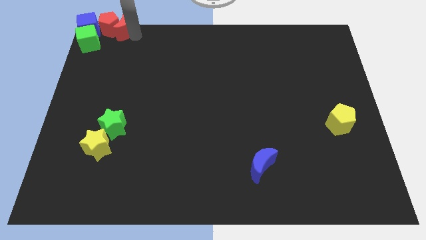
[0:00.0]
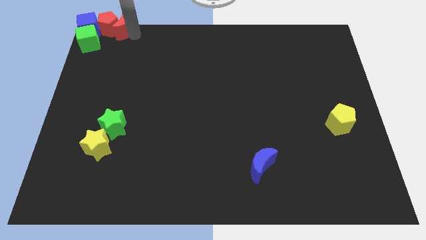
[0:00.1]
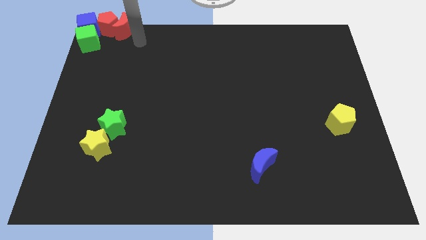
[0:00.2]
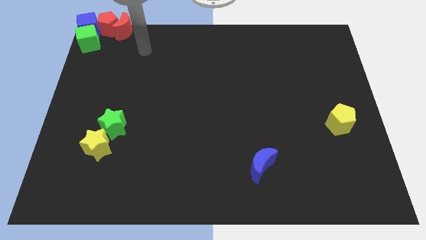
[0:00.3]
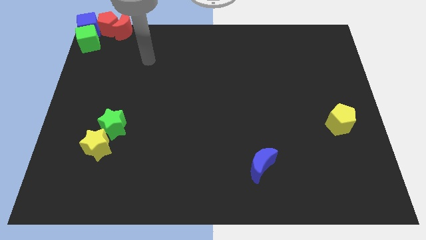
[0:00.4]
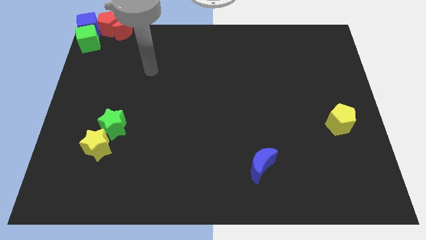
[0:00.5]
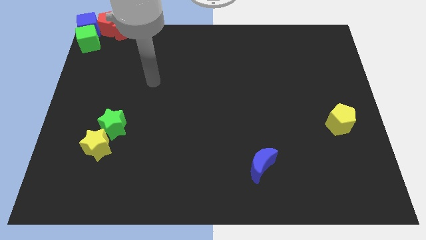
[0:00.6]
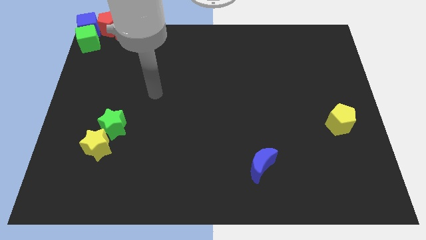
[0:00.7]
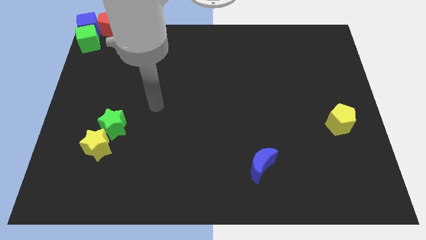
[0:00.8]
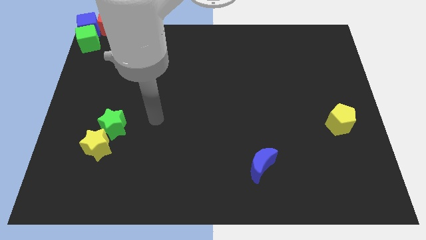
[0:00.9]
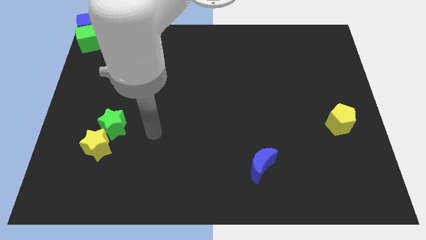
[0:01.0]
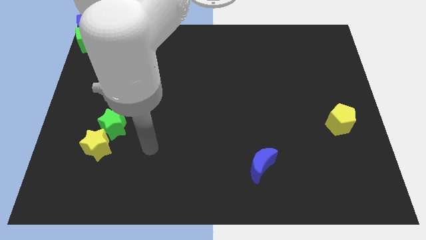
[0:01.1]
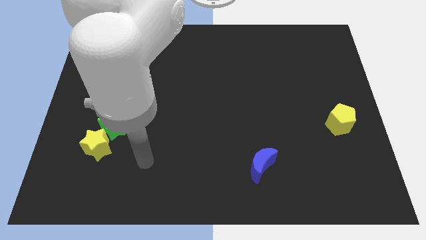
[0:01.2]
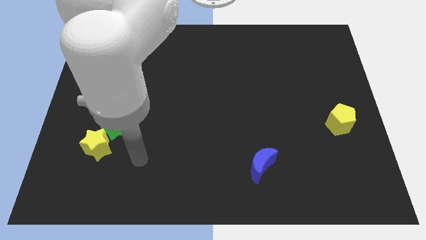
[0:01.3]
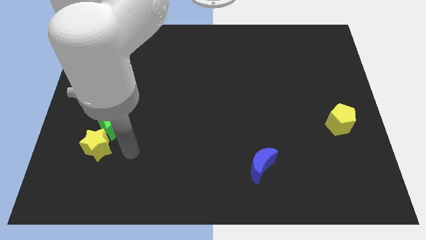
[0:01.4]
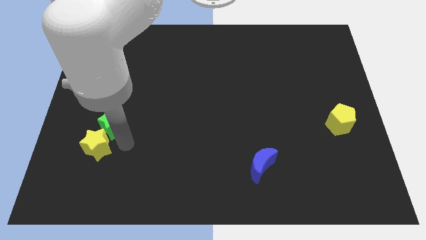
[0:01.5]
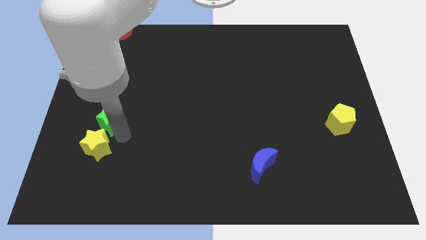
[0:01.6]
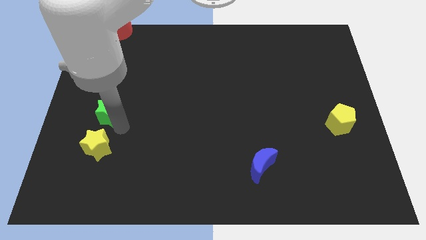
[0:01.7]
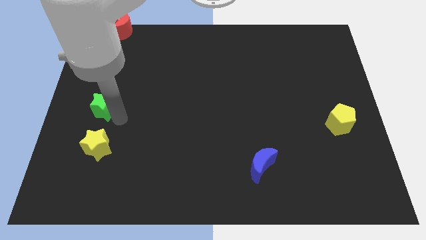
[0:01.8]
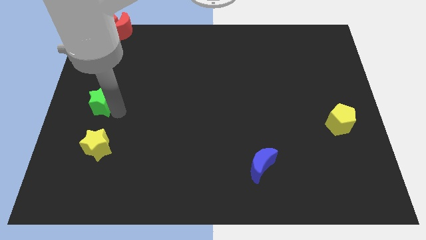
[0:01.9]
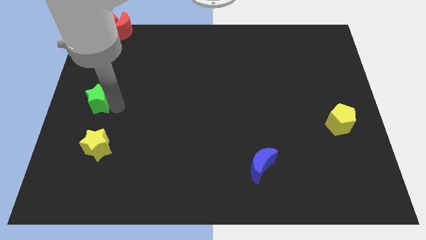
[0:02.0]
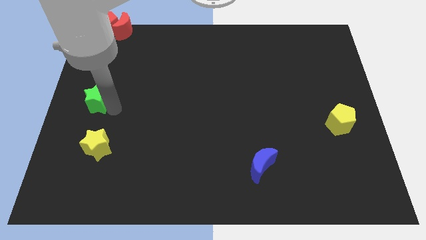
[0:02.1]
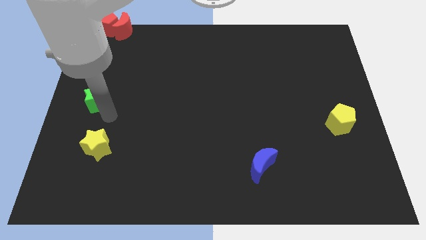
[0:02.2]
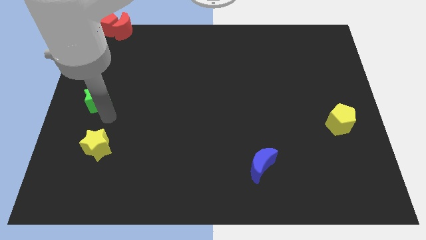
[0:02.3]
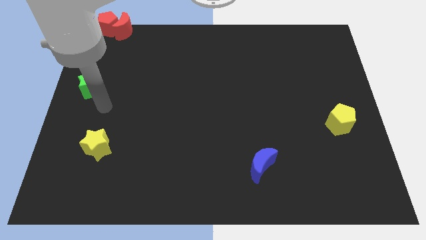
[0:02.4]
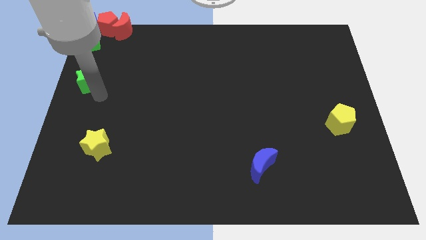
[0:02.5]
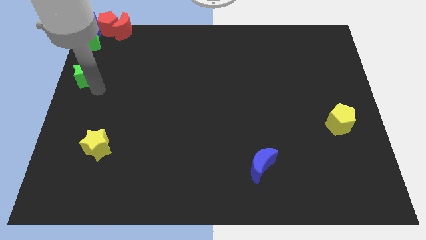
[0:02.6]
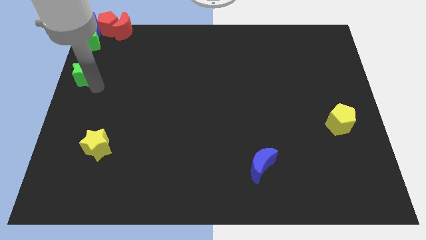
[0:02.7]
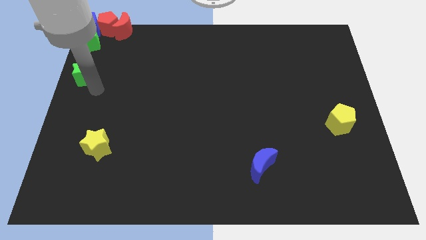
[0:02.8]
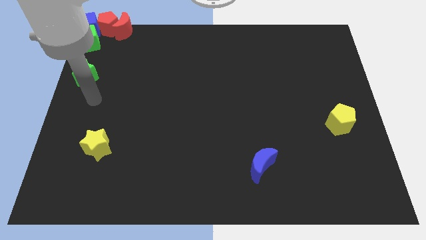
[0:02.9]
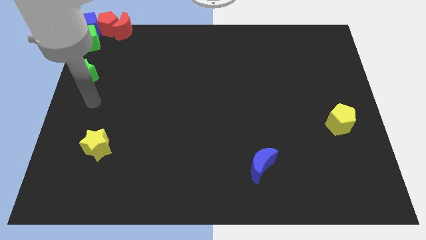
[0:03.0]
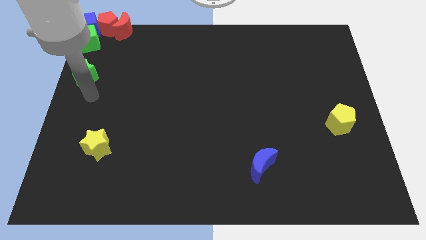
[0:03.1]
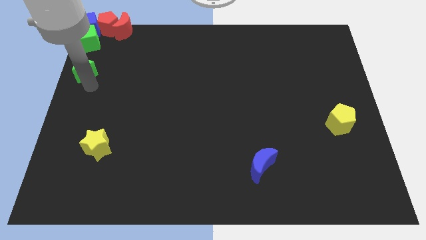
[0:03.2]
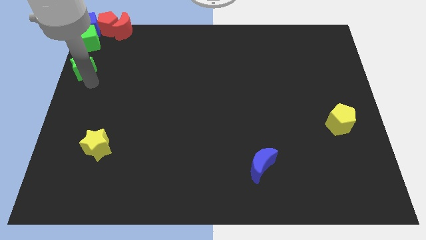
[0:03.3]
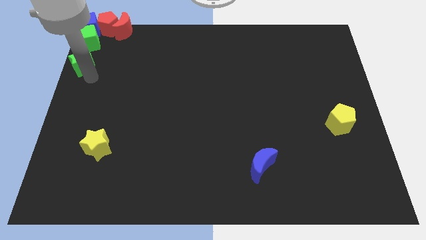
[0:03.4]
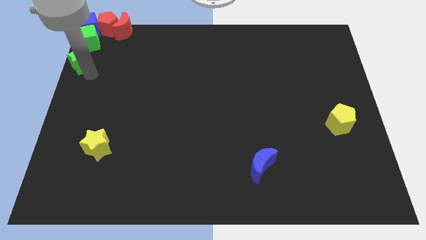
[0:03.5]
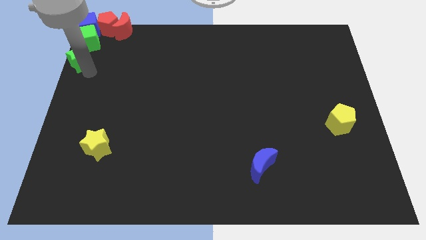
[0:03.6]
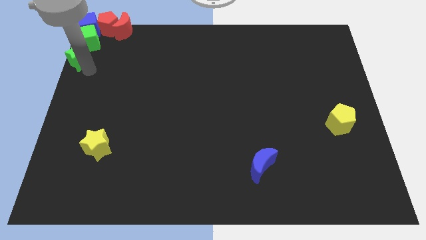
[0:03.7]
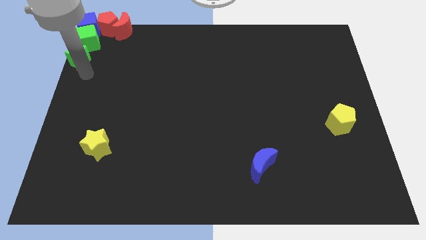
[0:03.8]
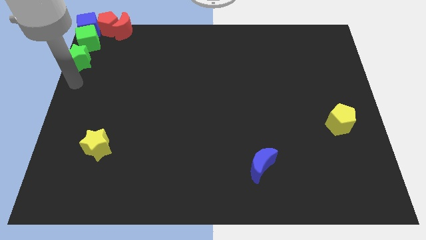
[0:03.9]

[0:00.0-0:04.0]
place the green star into green cube

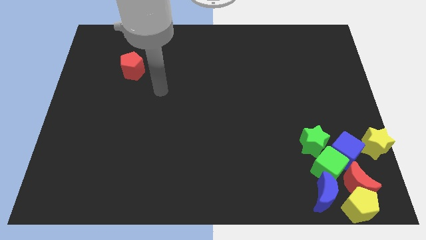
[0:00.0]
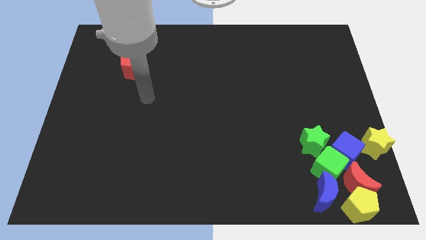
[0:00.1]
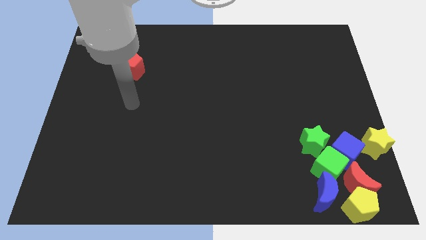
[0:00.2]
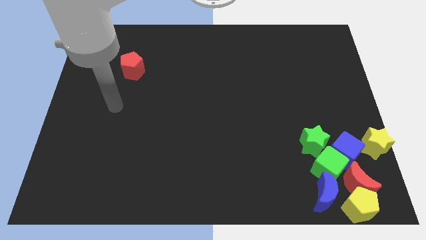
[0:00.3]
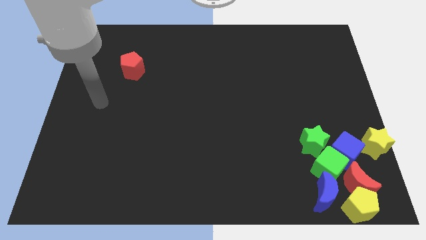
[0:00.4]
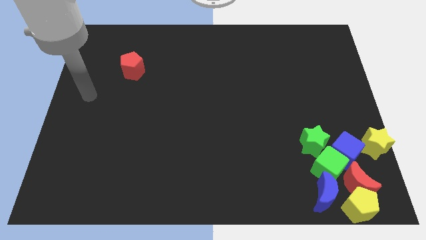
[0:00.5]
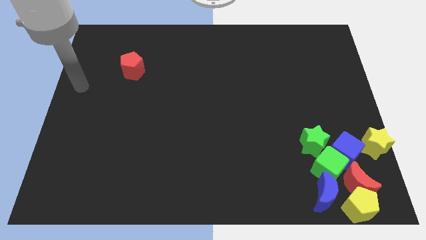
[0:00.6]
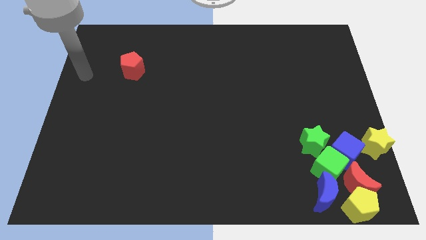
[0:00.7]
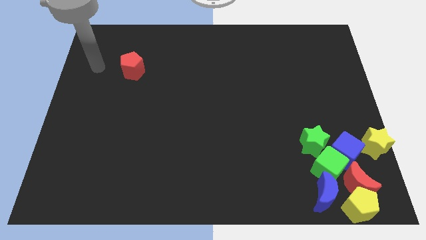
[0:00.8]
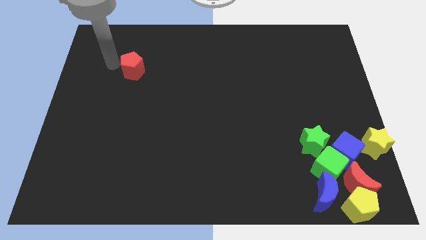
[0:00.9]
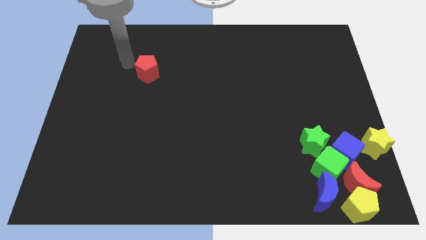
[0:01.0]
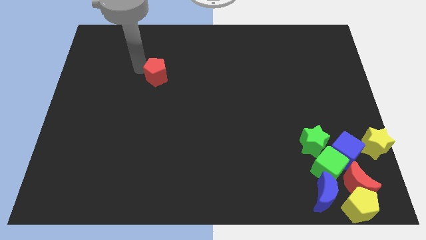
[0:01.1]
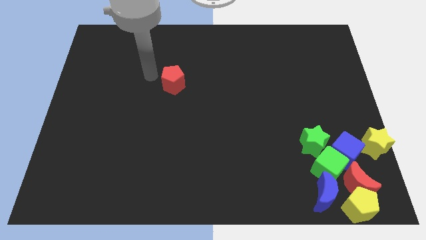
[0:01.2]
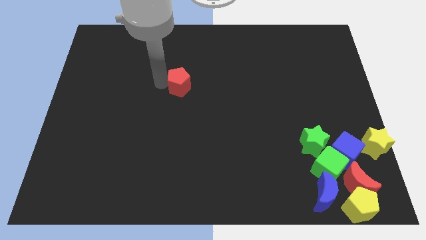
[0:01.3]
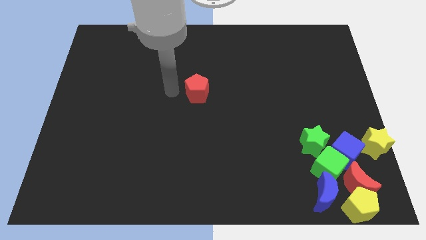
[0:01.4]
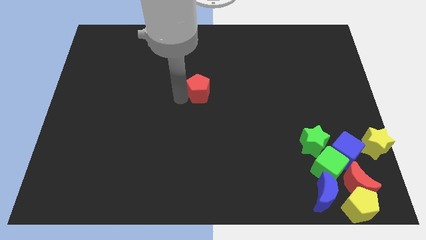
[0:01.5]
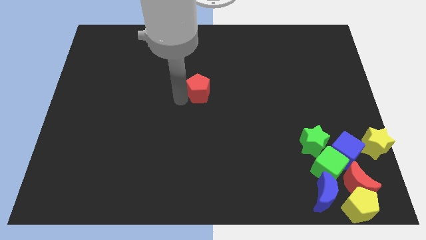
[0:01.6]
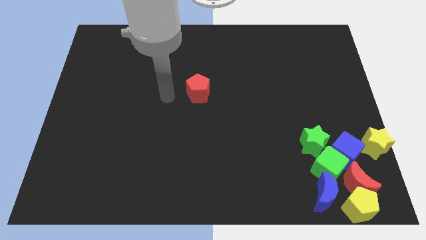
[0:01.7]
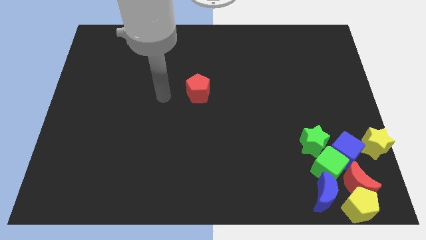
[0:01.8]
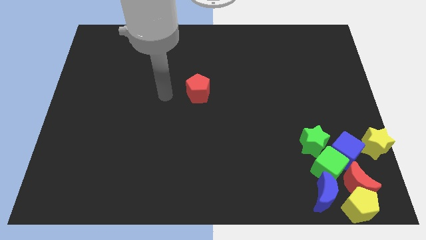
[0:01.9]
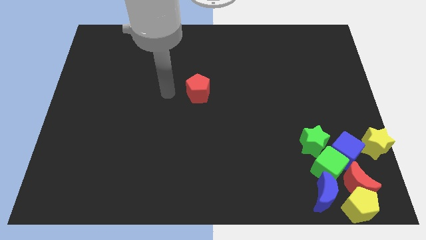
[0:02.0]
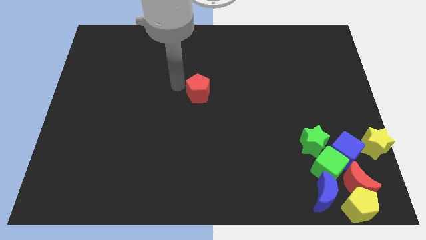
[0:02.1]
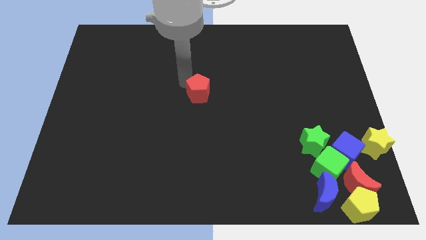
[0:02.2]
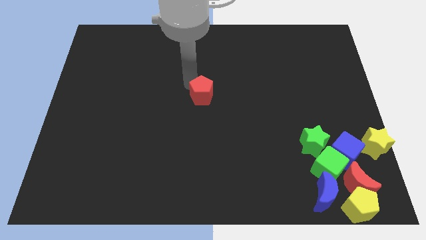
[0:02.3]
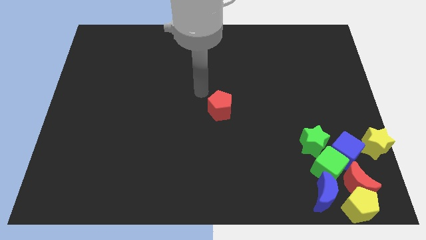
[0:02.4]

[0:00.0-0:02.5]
push the red pentagon to the center of board

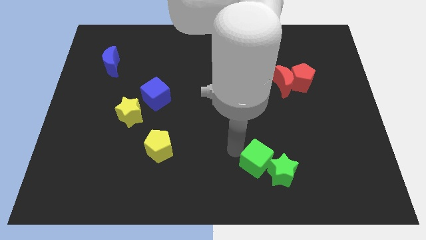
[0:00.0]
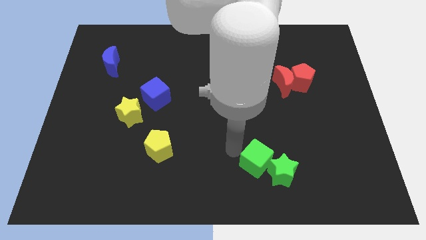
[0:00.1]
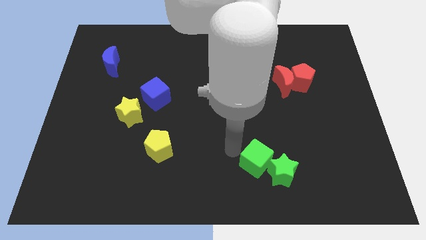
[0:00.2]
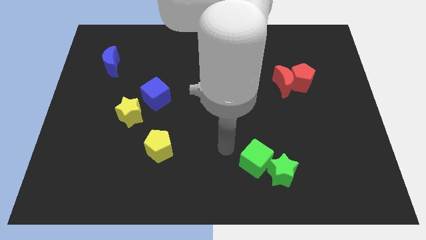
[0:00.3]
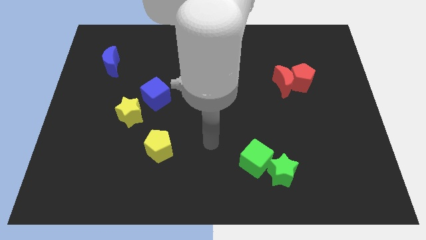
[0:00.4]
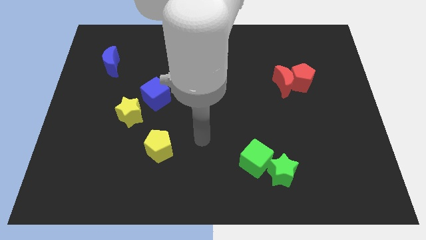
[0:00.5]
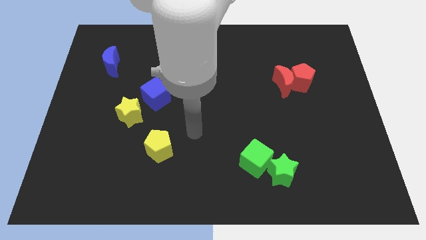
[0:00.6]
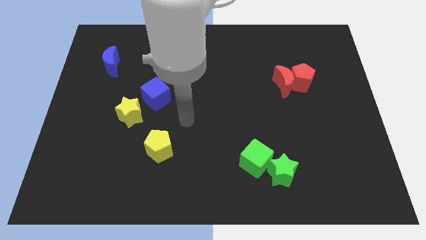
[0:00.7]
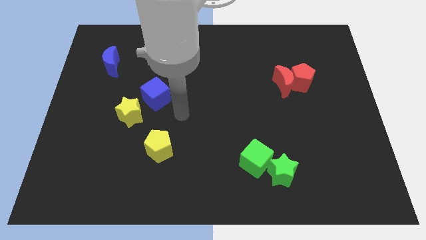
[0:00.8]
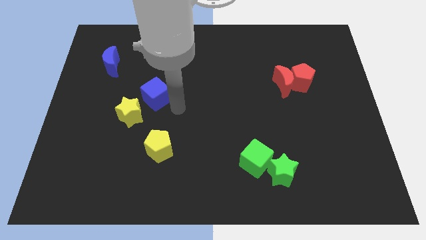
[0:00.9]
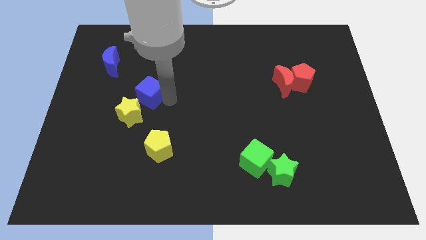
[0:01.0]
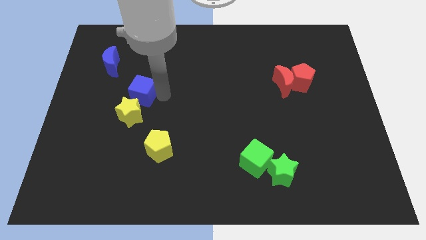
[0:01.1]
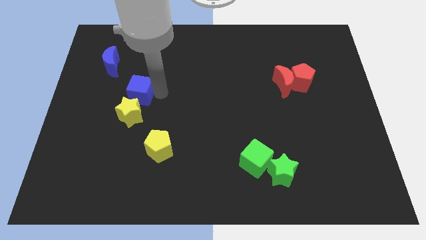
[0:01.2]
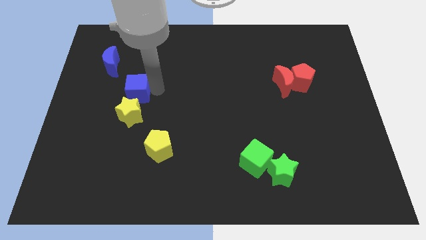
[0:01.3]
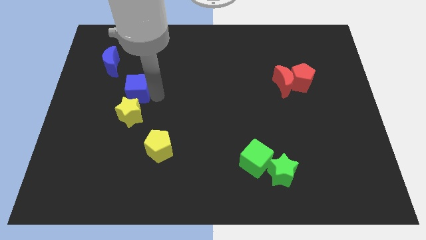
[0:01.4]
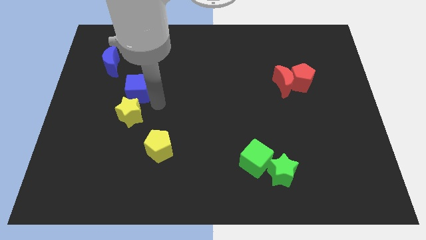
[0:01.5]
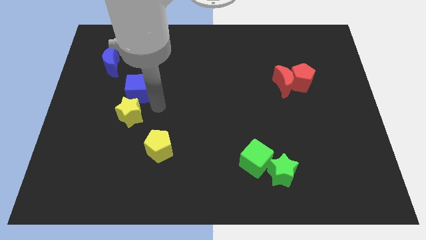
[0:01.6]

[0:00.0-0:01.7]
put the blue cube above the yellow star

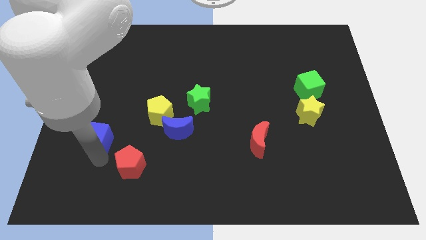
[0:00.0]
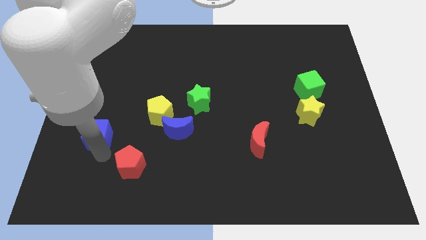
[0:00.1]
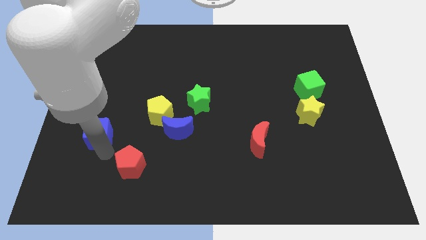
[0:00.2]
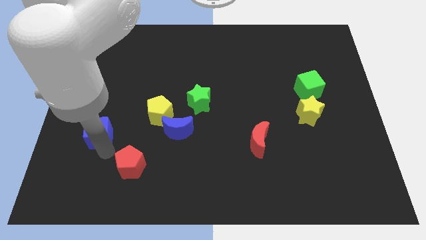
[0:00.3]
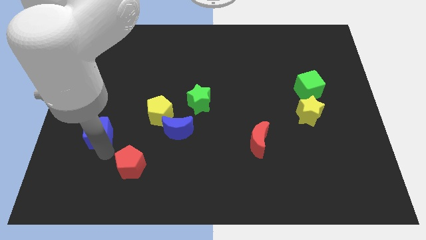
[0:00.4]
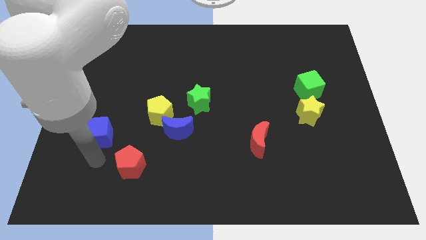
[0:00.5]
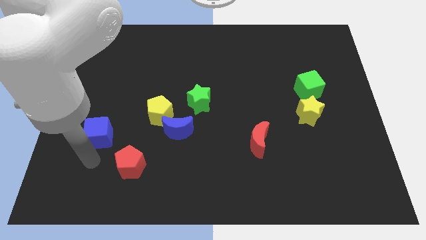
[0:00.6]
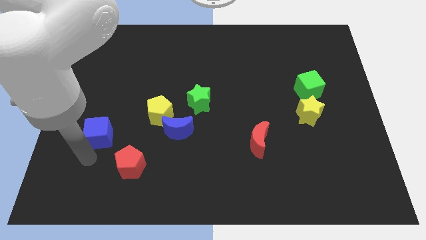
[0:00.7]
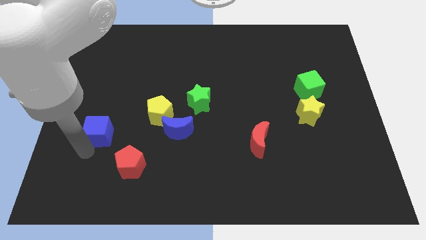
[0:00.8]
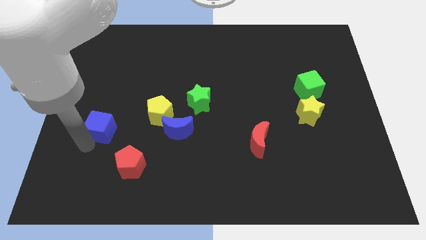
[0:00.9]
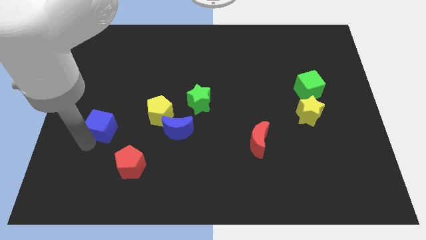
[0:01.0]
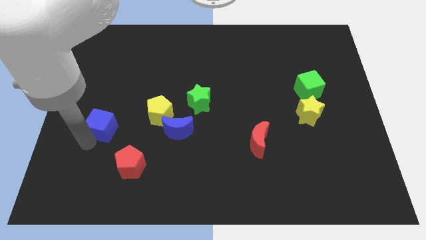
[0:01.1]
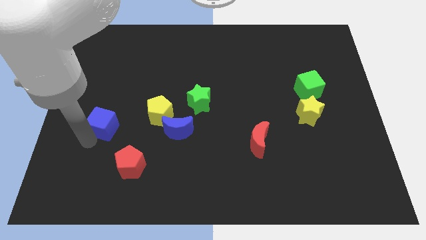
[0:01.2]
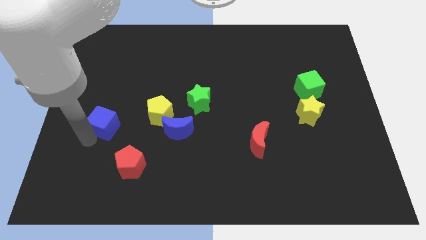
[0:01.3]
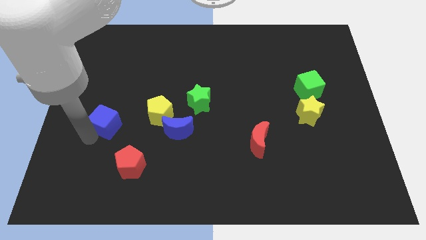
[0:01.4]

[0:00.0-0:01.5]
push the blue moon diagonally top left to the red pentagon
